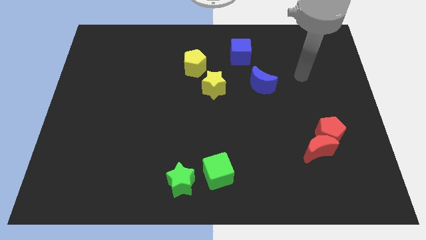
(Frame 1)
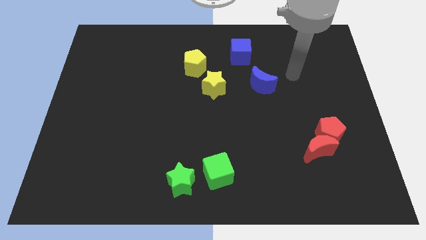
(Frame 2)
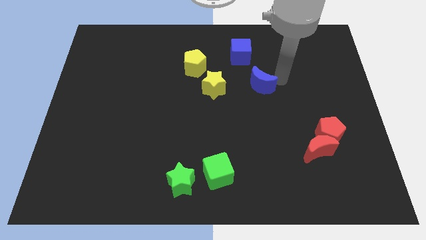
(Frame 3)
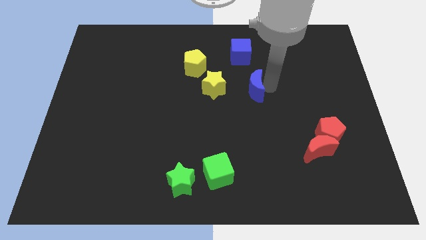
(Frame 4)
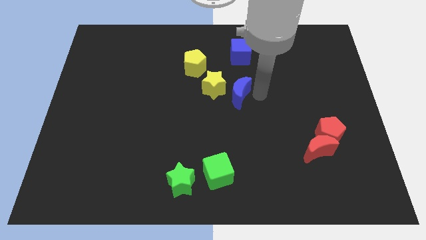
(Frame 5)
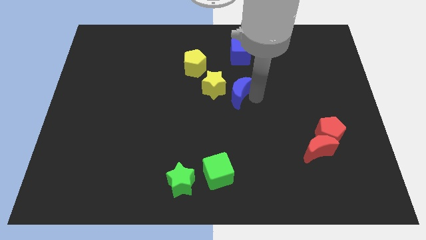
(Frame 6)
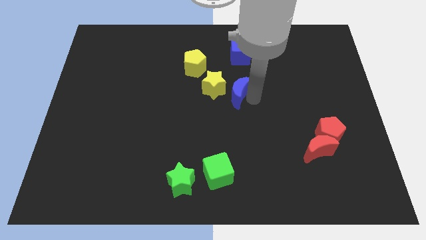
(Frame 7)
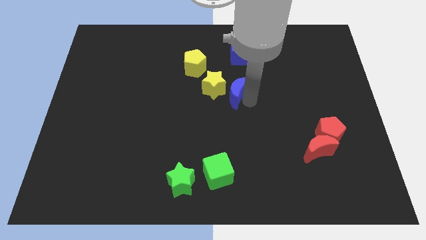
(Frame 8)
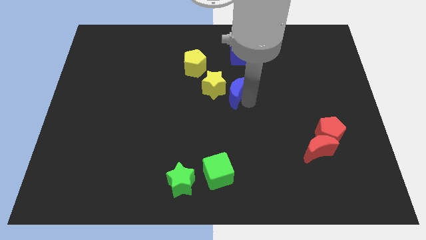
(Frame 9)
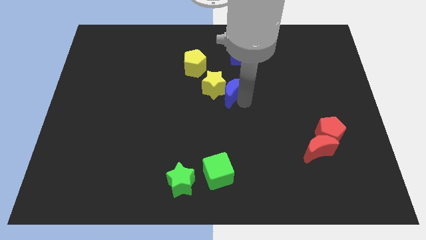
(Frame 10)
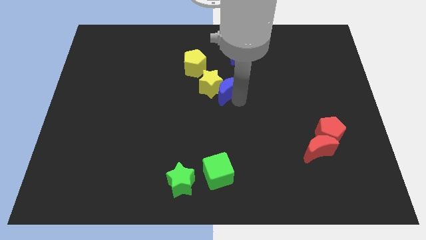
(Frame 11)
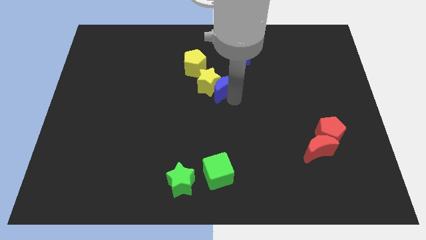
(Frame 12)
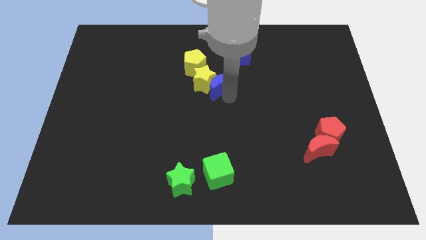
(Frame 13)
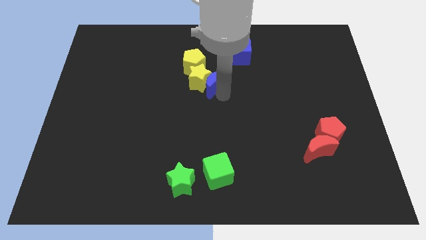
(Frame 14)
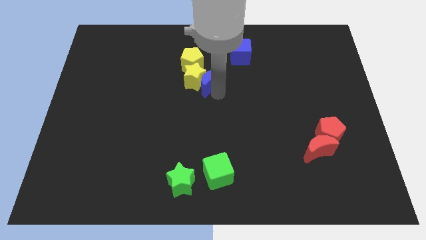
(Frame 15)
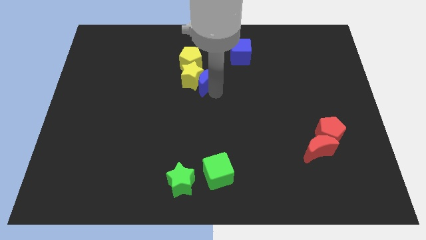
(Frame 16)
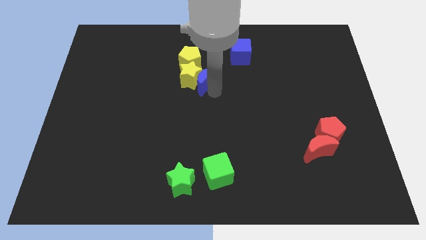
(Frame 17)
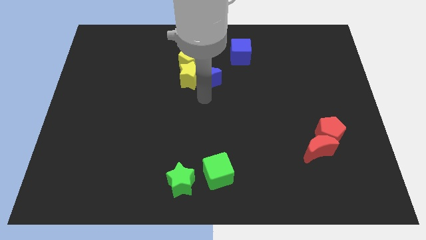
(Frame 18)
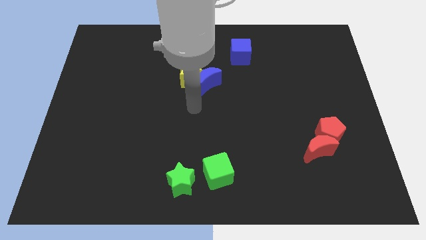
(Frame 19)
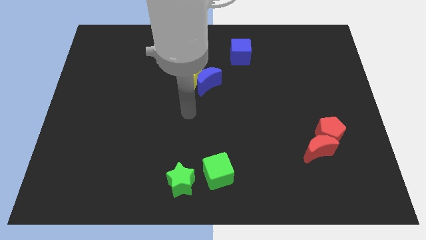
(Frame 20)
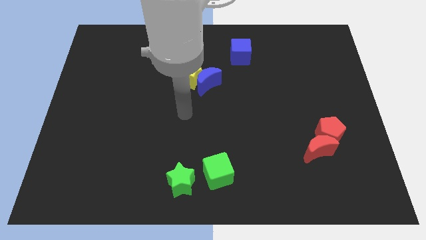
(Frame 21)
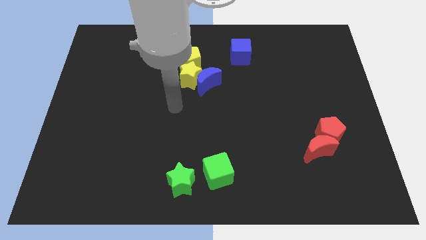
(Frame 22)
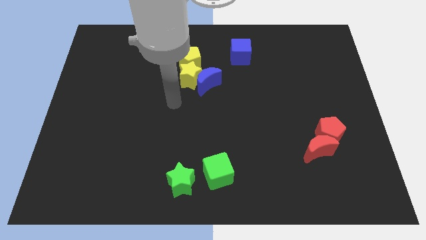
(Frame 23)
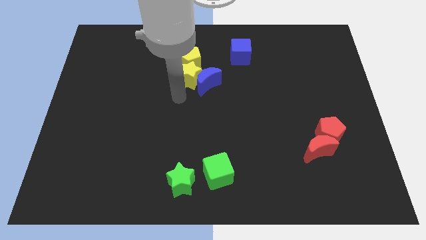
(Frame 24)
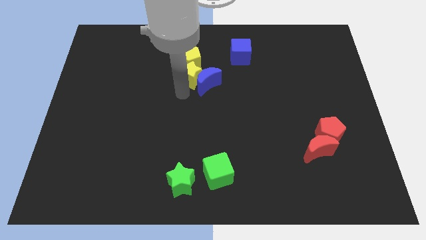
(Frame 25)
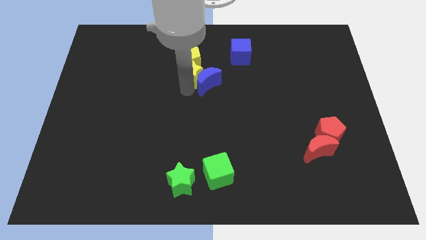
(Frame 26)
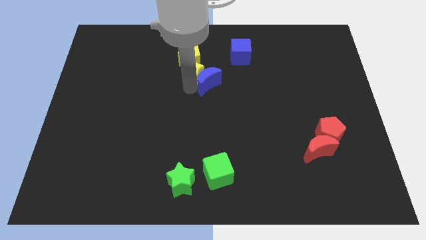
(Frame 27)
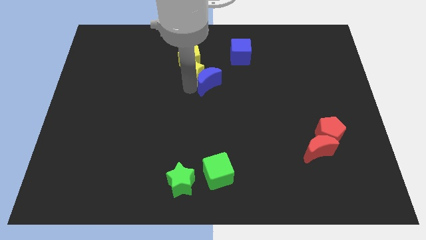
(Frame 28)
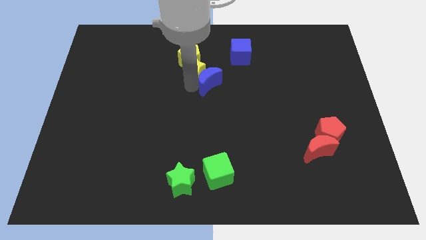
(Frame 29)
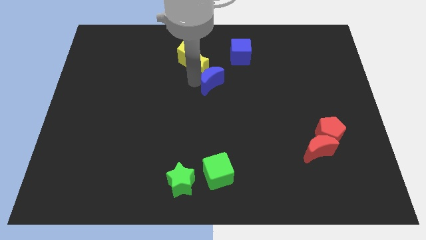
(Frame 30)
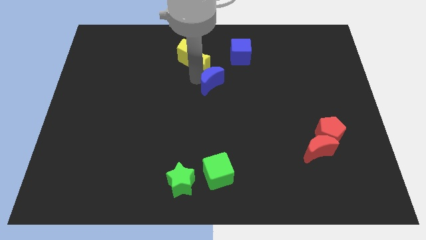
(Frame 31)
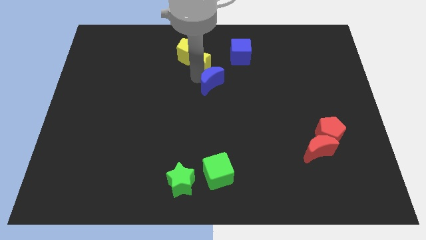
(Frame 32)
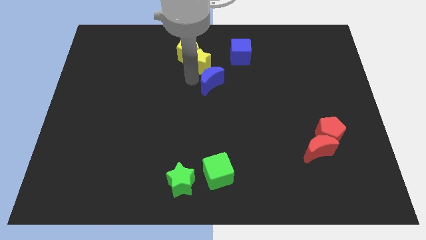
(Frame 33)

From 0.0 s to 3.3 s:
push blue moon in to yellow star

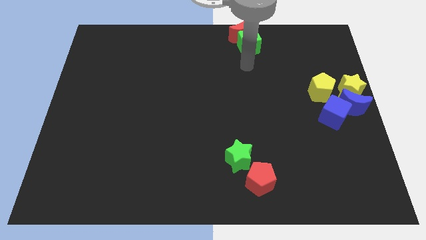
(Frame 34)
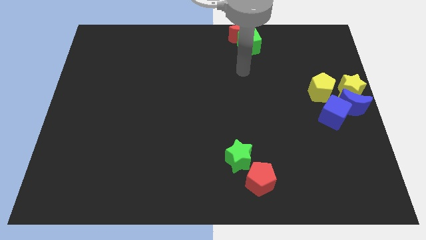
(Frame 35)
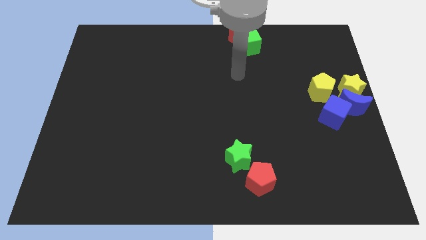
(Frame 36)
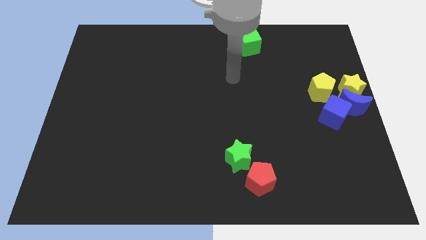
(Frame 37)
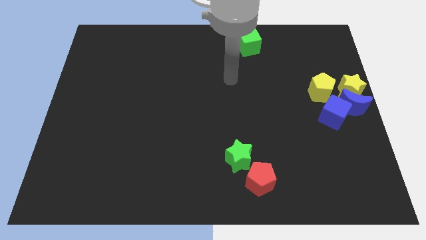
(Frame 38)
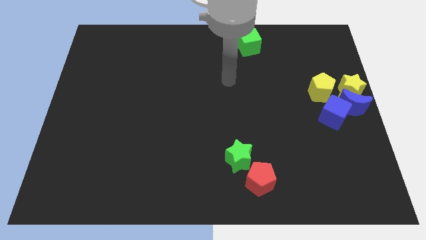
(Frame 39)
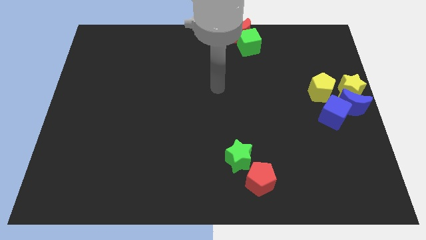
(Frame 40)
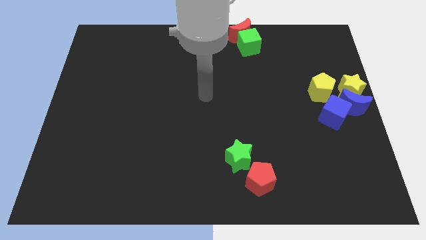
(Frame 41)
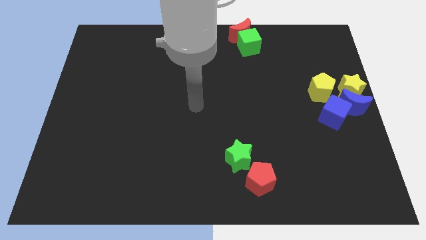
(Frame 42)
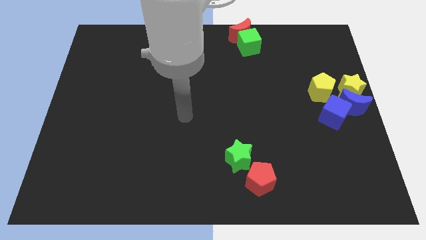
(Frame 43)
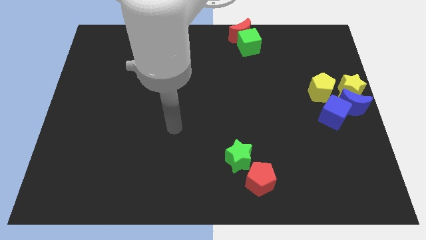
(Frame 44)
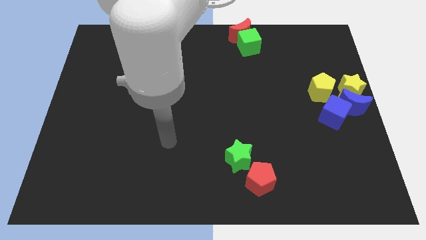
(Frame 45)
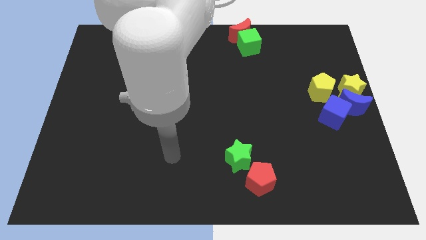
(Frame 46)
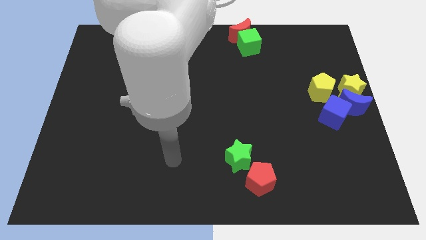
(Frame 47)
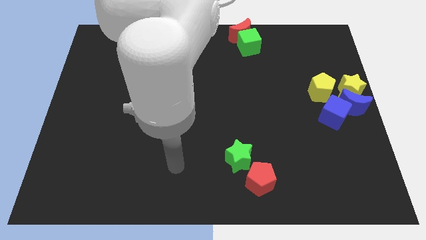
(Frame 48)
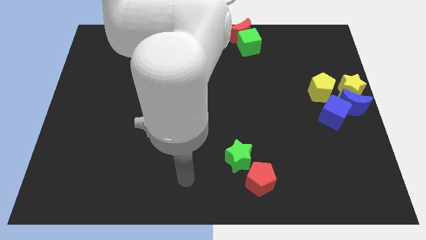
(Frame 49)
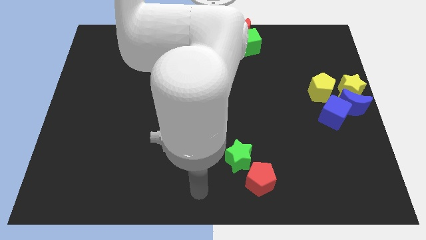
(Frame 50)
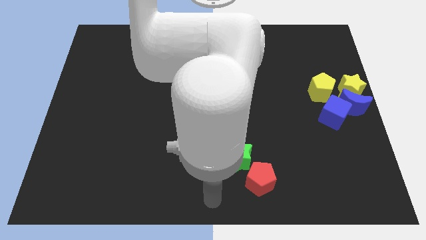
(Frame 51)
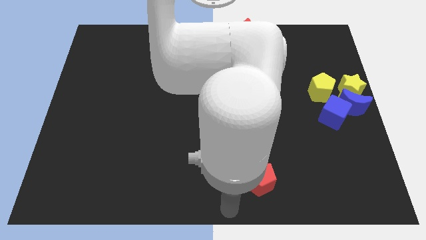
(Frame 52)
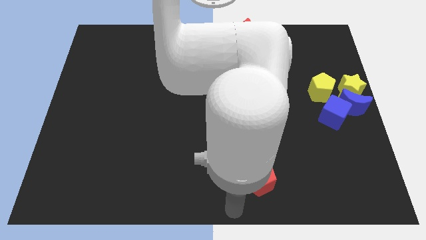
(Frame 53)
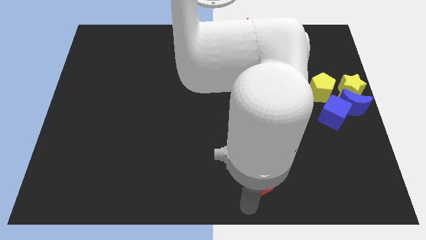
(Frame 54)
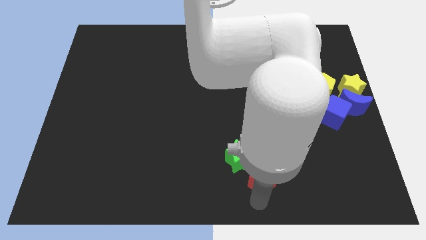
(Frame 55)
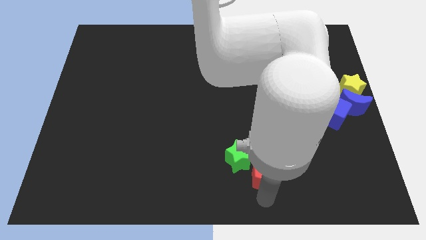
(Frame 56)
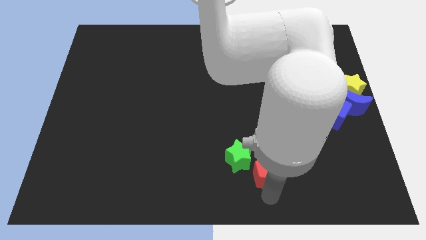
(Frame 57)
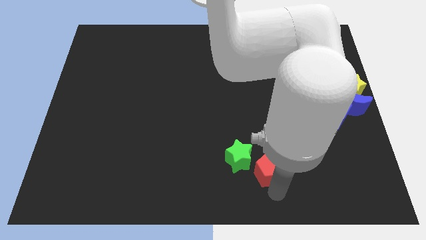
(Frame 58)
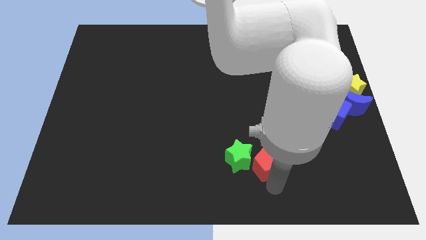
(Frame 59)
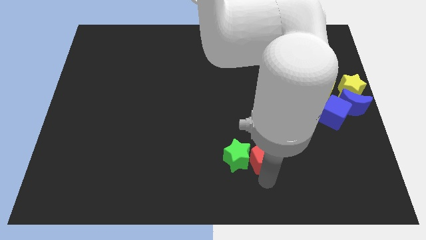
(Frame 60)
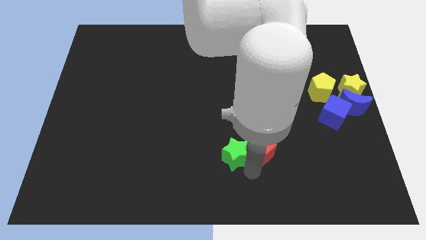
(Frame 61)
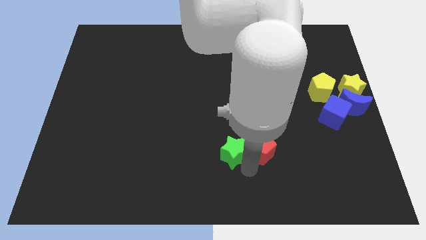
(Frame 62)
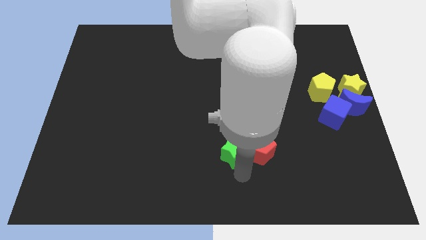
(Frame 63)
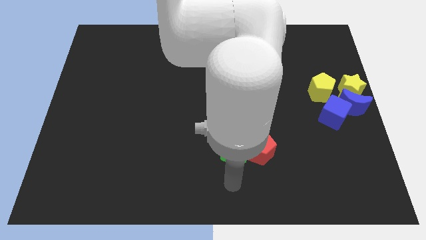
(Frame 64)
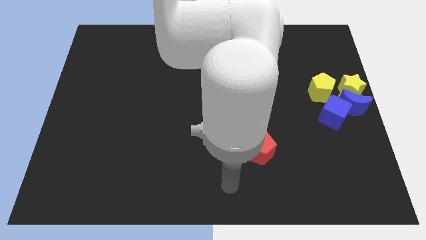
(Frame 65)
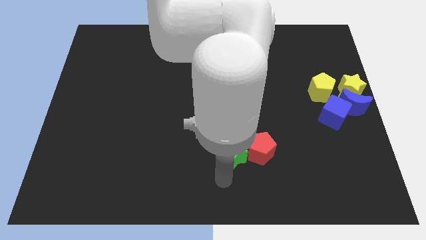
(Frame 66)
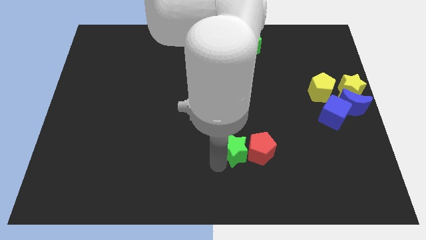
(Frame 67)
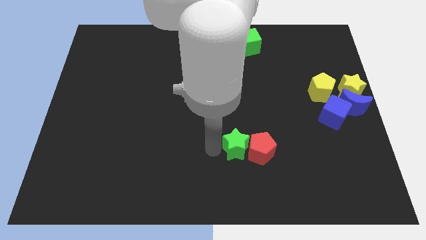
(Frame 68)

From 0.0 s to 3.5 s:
place the red pentagon and green star together at the bottom side of the green cube

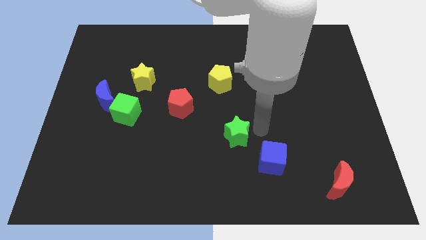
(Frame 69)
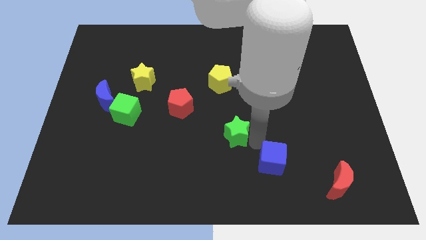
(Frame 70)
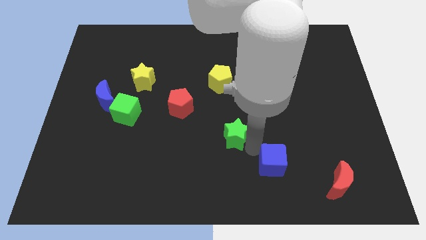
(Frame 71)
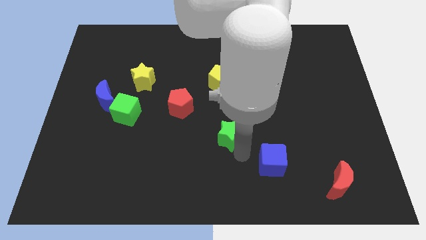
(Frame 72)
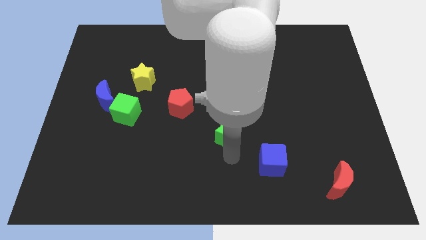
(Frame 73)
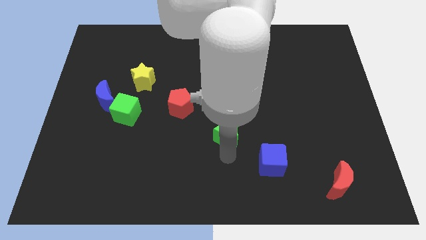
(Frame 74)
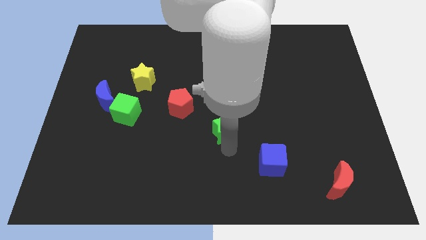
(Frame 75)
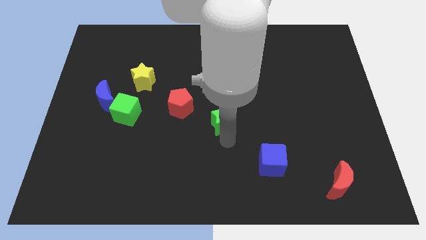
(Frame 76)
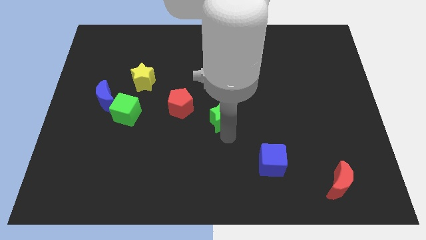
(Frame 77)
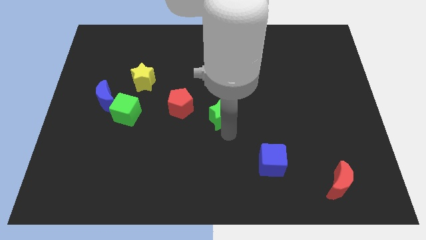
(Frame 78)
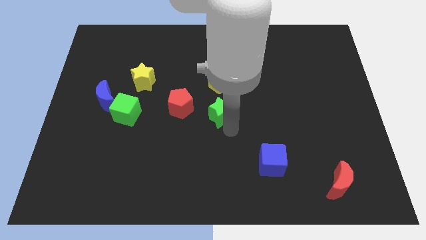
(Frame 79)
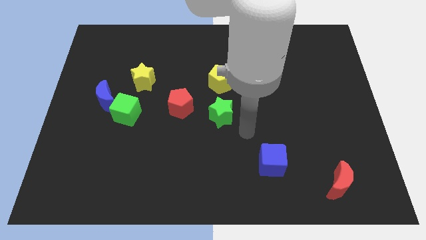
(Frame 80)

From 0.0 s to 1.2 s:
drag green star towards the red pentagon

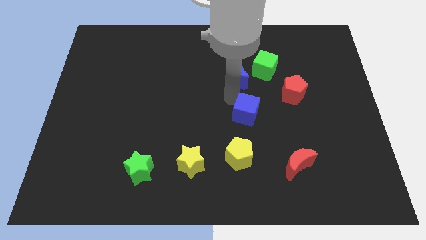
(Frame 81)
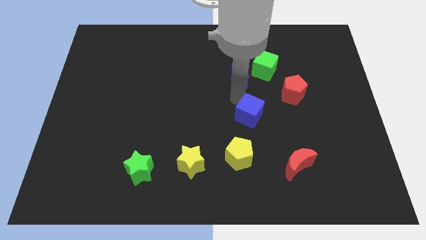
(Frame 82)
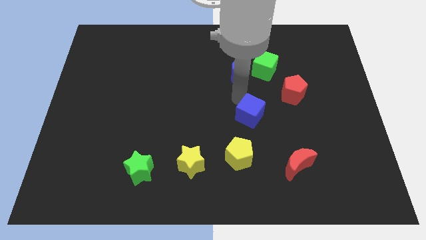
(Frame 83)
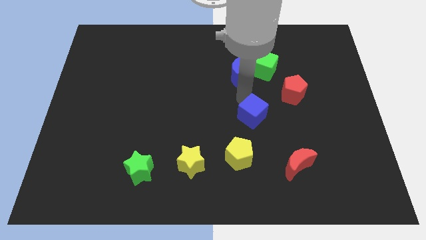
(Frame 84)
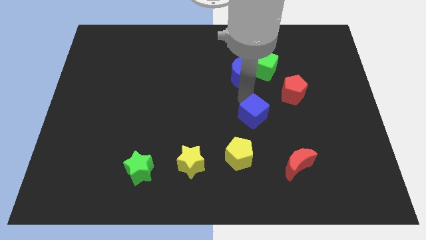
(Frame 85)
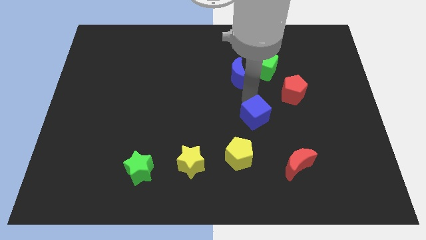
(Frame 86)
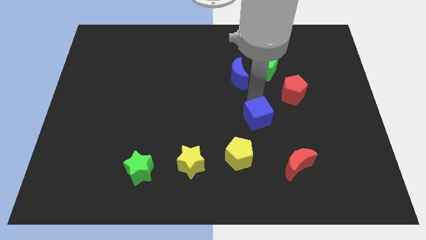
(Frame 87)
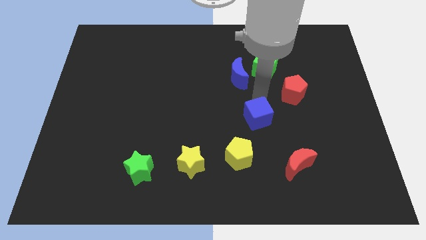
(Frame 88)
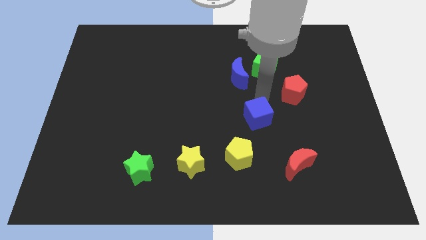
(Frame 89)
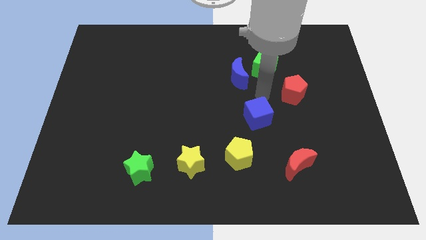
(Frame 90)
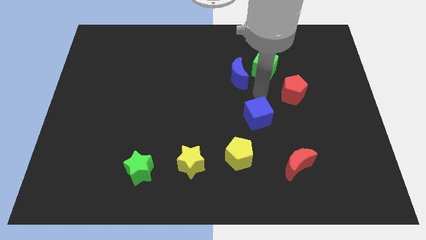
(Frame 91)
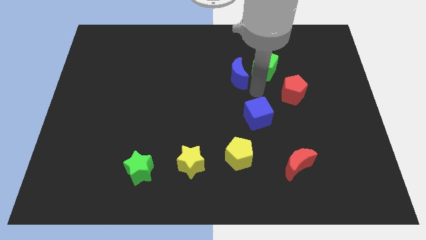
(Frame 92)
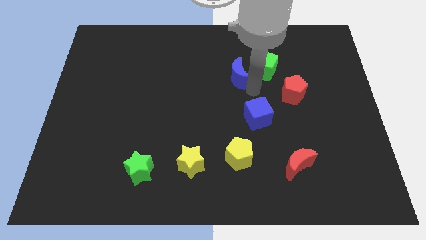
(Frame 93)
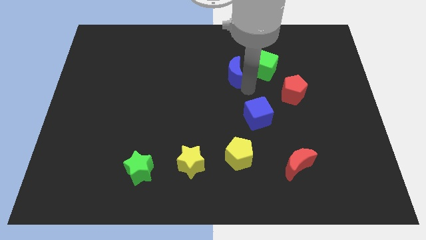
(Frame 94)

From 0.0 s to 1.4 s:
slightly push the blue cube towards the right side
